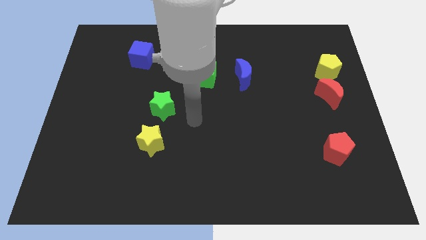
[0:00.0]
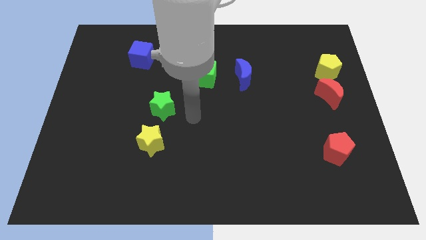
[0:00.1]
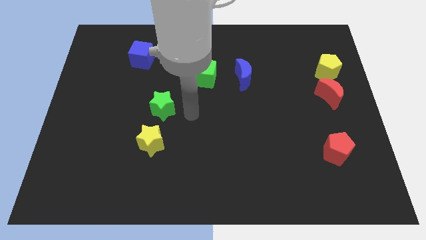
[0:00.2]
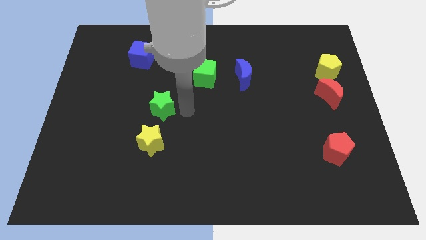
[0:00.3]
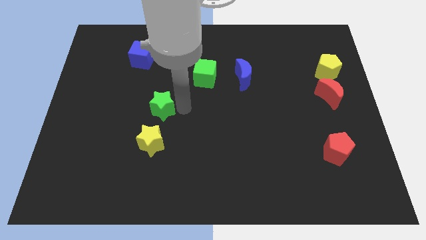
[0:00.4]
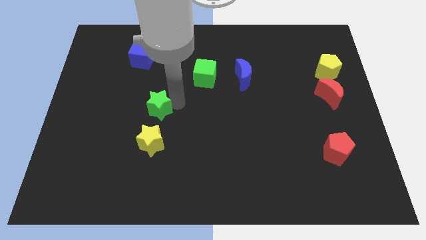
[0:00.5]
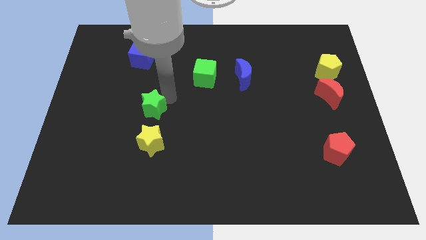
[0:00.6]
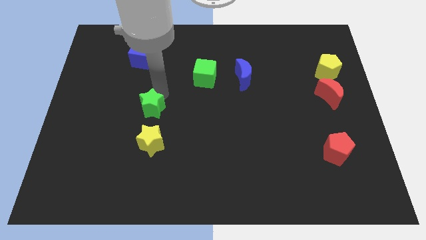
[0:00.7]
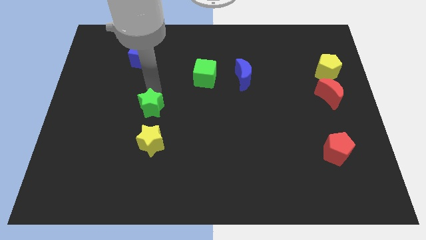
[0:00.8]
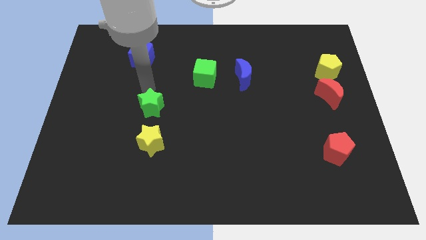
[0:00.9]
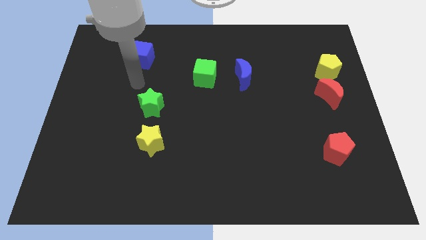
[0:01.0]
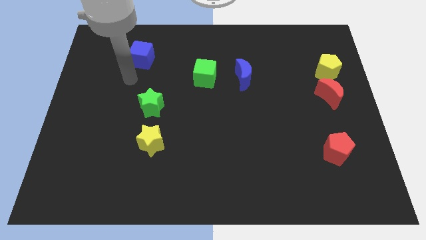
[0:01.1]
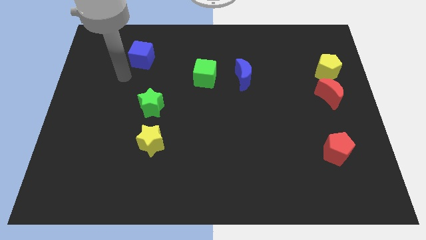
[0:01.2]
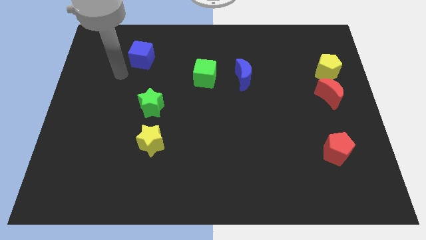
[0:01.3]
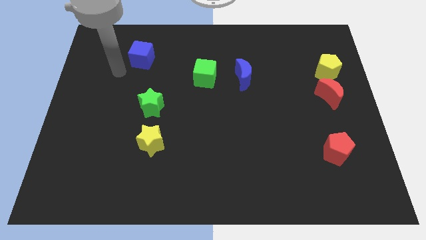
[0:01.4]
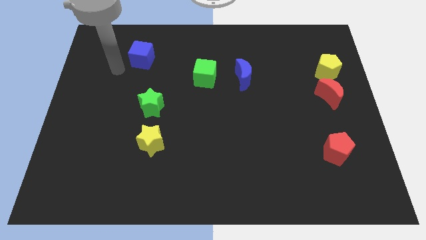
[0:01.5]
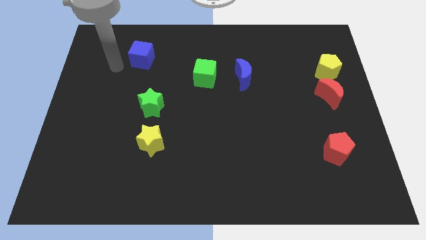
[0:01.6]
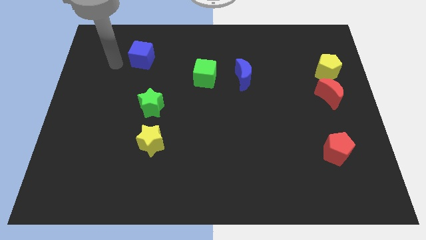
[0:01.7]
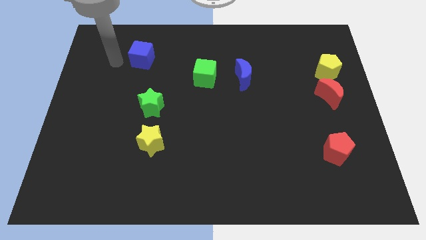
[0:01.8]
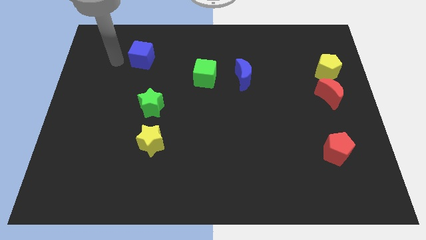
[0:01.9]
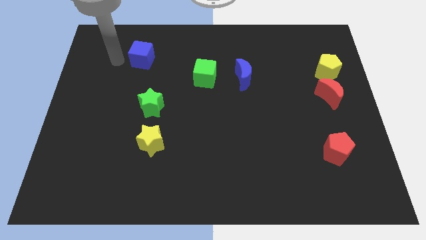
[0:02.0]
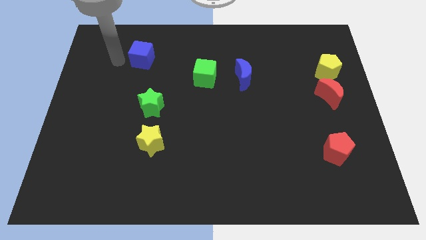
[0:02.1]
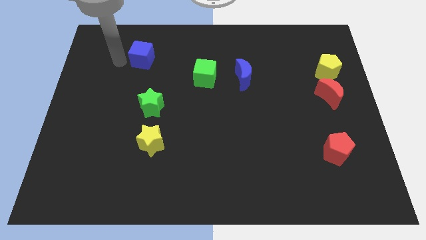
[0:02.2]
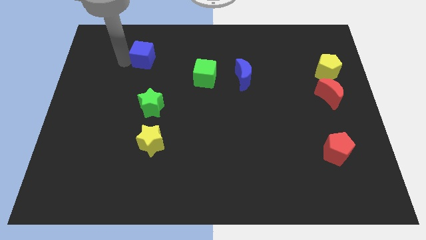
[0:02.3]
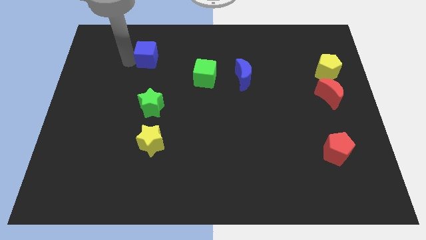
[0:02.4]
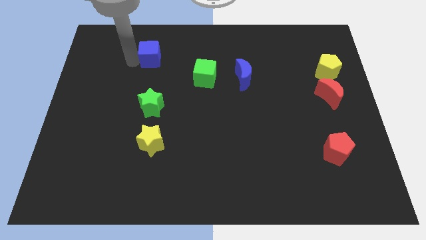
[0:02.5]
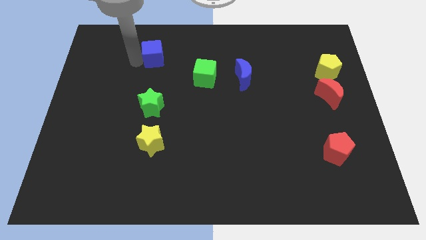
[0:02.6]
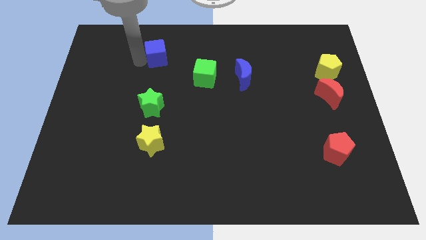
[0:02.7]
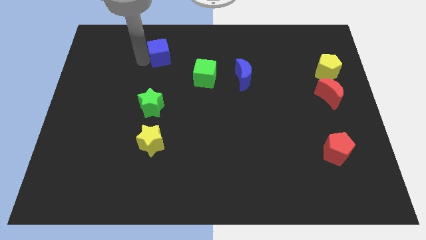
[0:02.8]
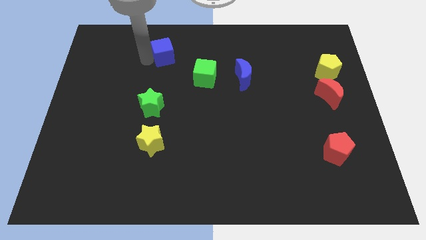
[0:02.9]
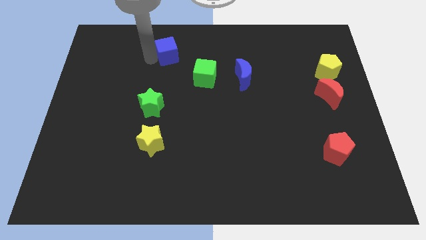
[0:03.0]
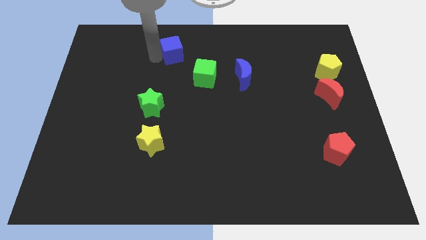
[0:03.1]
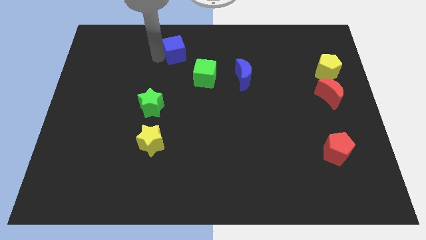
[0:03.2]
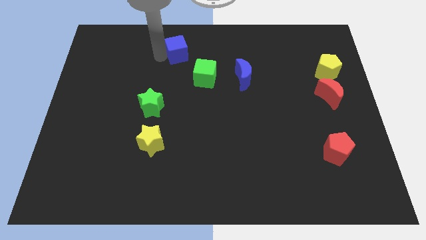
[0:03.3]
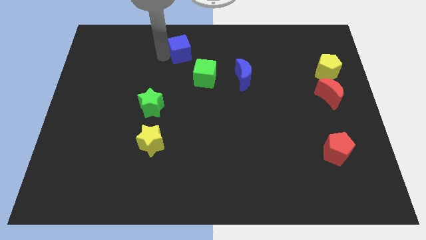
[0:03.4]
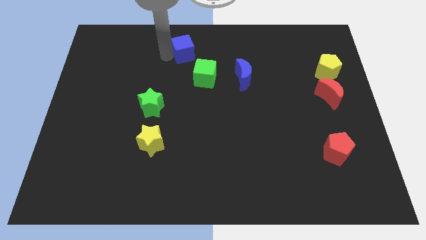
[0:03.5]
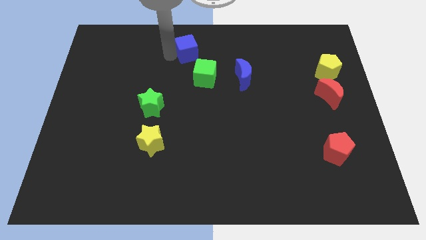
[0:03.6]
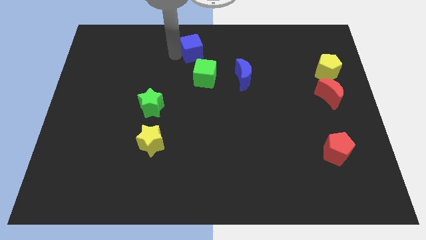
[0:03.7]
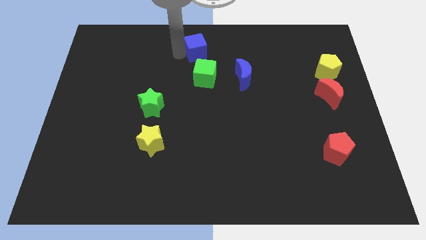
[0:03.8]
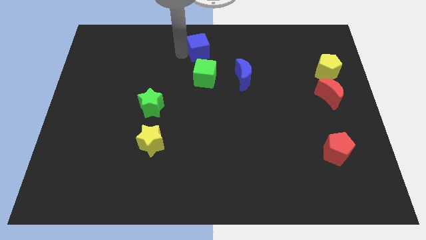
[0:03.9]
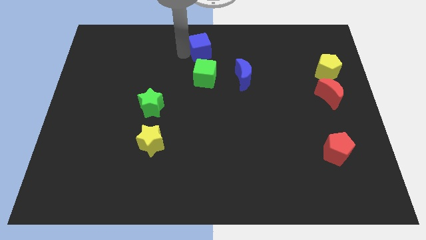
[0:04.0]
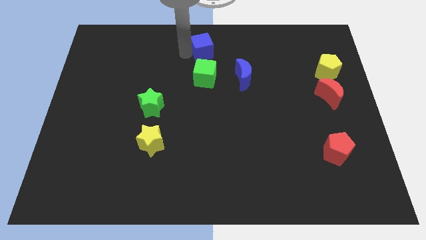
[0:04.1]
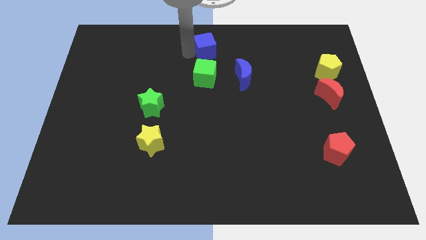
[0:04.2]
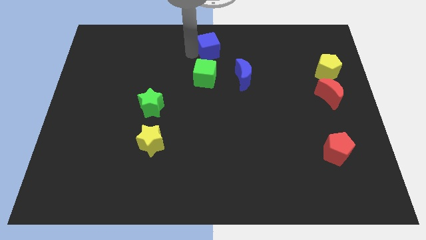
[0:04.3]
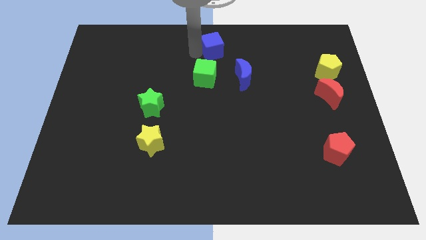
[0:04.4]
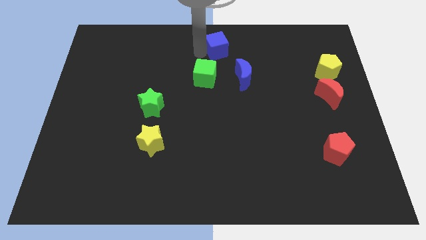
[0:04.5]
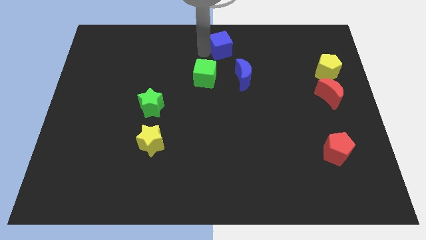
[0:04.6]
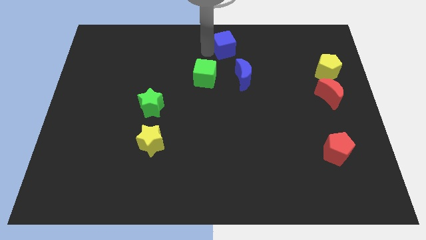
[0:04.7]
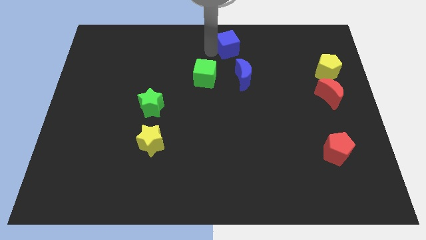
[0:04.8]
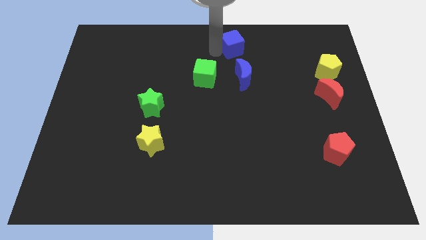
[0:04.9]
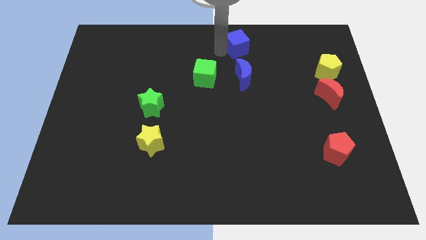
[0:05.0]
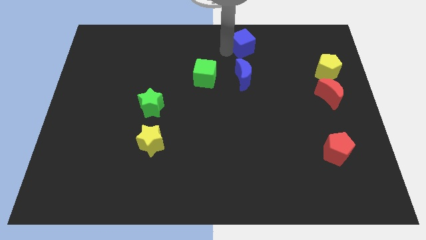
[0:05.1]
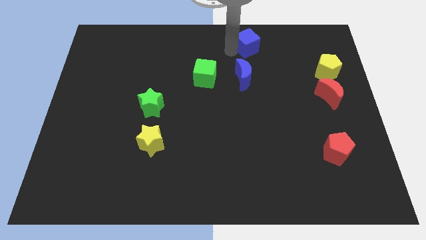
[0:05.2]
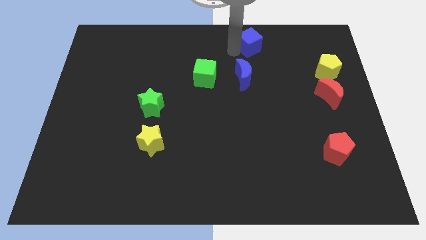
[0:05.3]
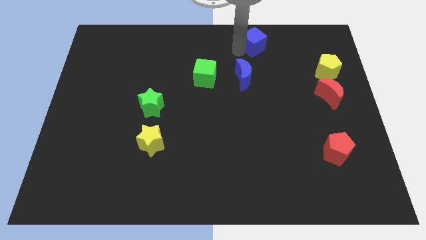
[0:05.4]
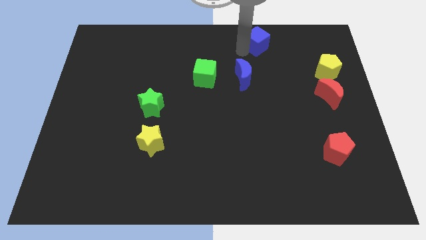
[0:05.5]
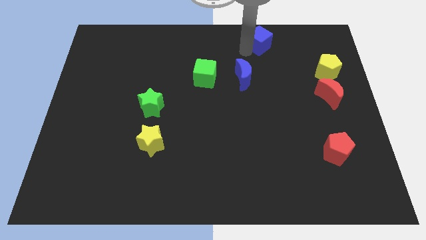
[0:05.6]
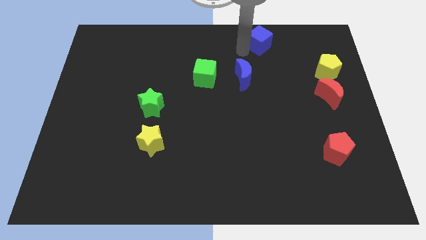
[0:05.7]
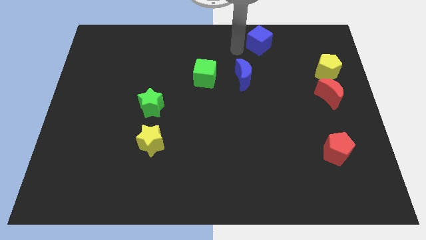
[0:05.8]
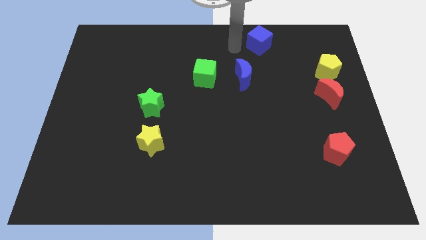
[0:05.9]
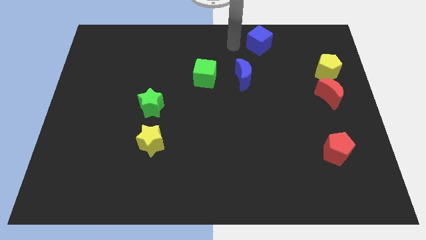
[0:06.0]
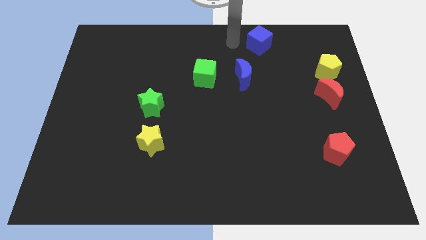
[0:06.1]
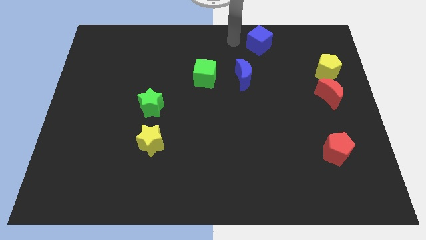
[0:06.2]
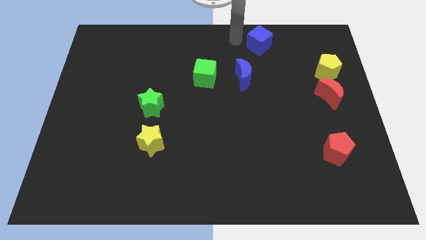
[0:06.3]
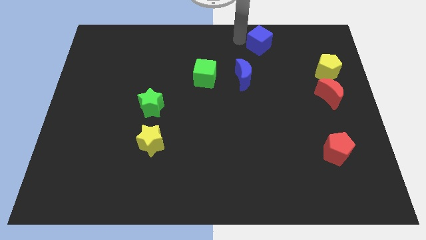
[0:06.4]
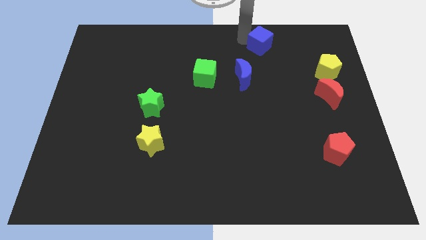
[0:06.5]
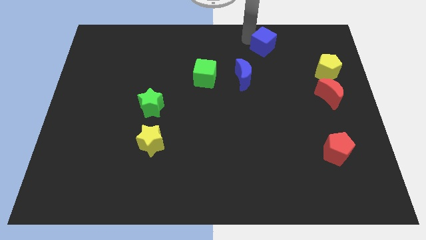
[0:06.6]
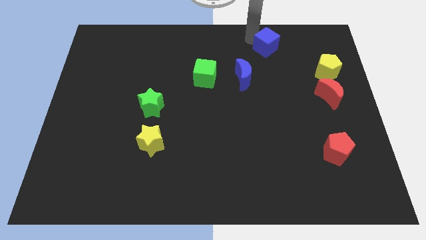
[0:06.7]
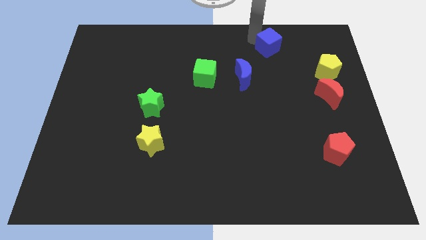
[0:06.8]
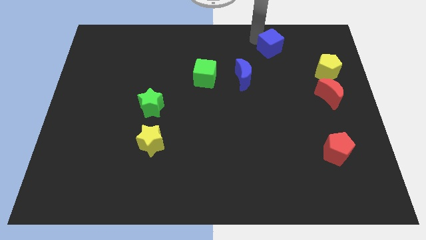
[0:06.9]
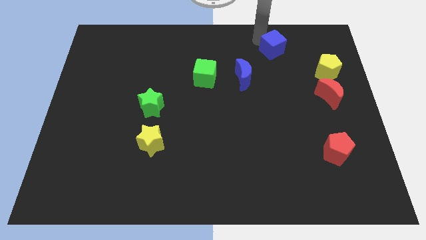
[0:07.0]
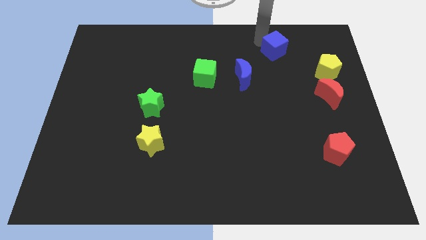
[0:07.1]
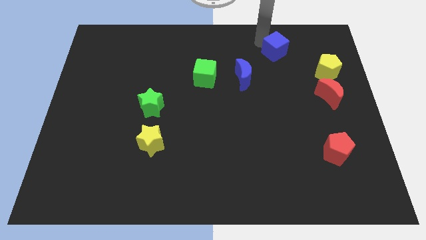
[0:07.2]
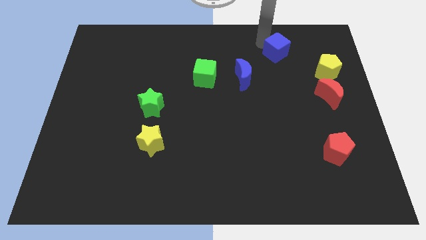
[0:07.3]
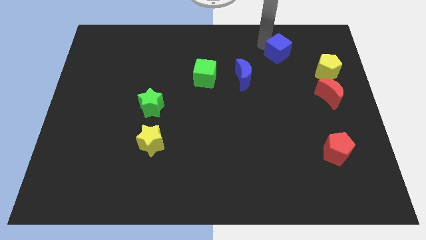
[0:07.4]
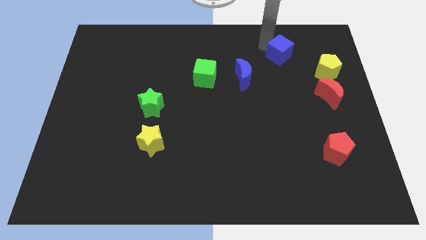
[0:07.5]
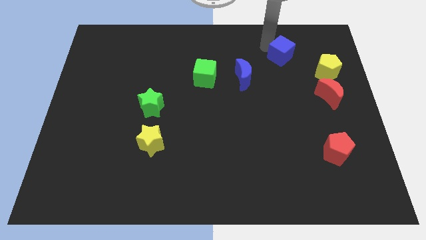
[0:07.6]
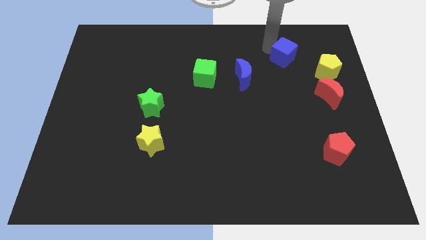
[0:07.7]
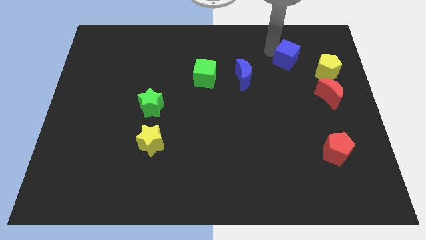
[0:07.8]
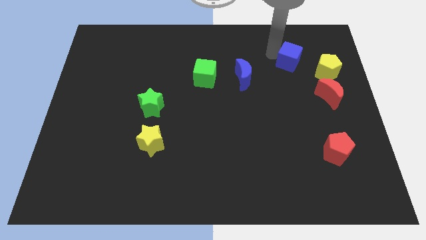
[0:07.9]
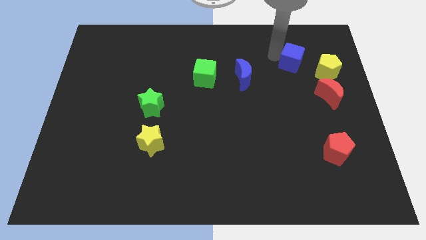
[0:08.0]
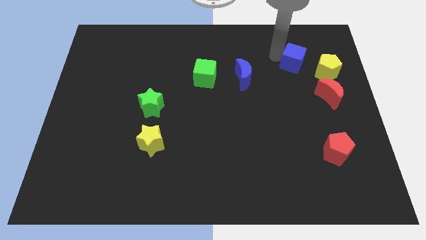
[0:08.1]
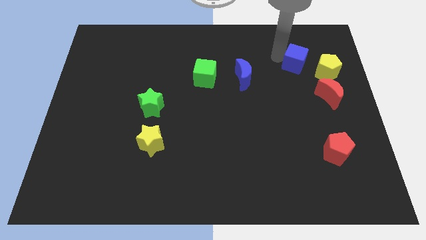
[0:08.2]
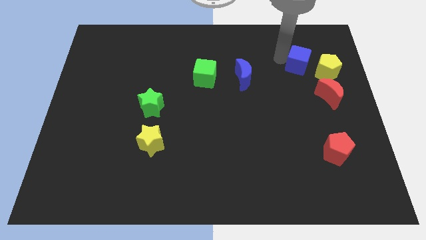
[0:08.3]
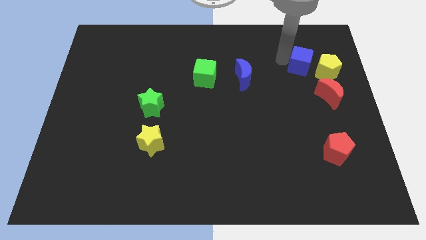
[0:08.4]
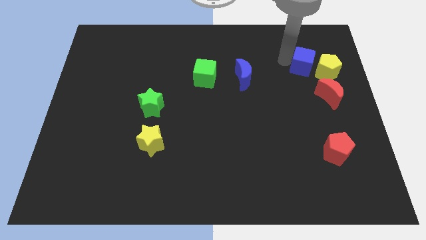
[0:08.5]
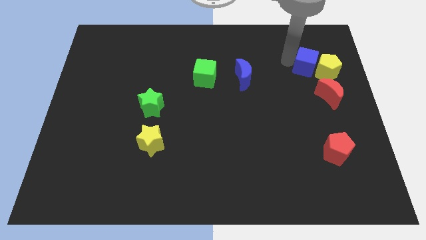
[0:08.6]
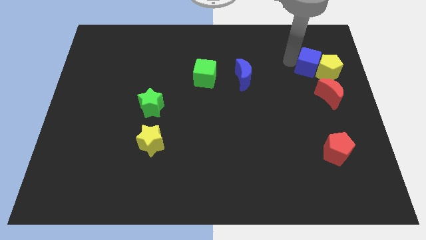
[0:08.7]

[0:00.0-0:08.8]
move the blue cube to the yellow pentagon
